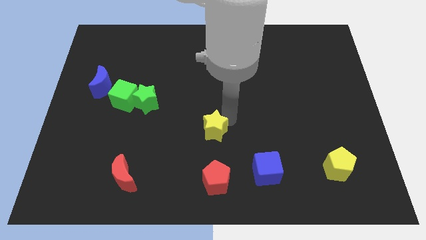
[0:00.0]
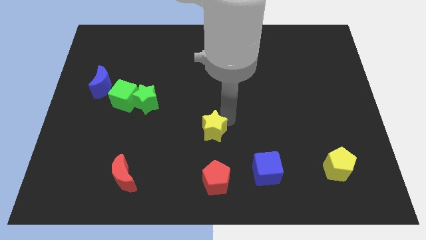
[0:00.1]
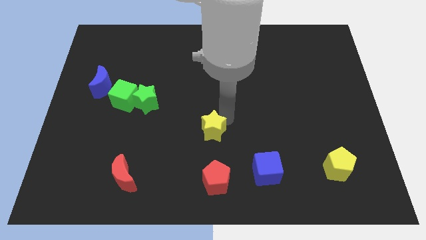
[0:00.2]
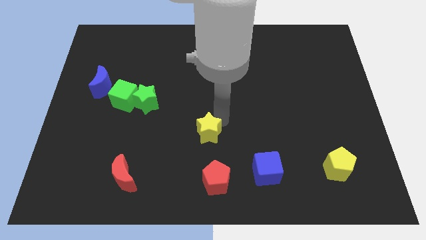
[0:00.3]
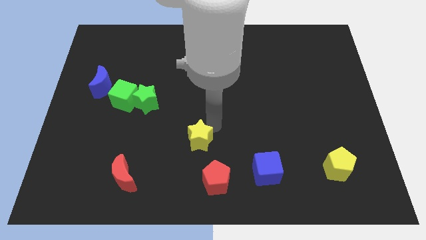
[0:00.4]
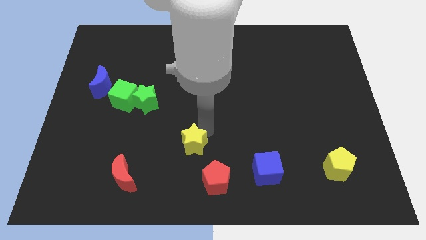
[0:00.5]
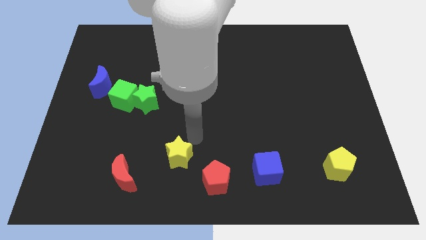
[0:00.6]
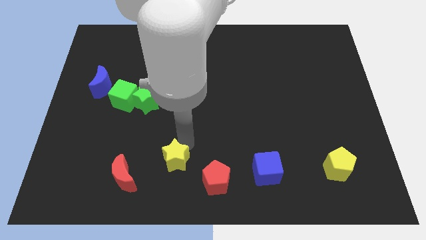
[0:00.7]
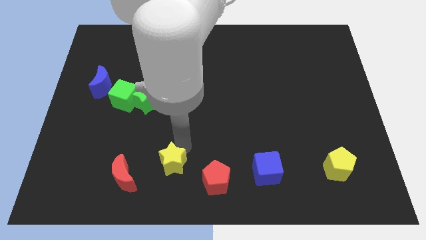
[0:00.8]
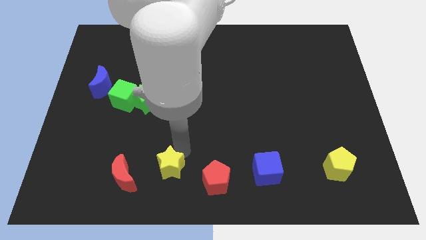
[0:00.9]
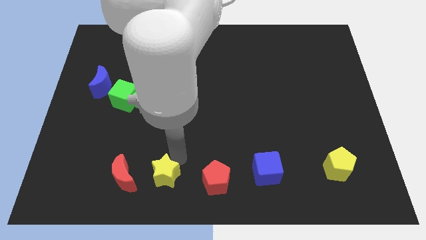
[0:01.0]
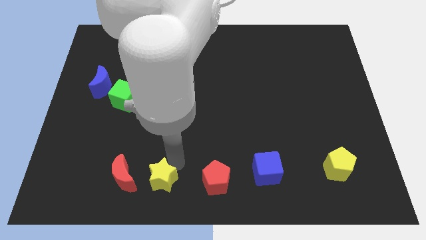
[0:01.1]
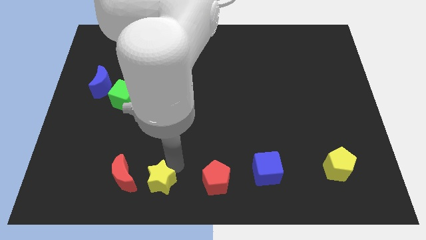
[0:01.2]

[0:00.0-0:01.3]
move the yellow star between red pentagon and red moon

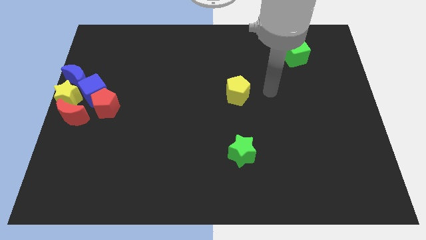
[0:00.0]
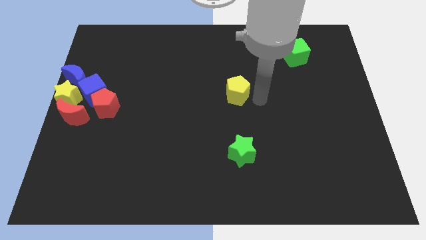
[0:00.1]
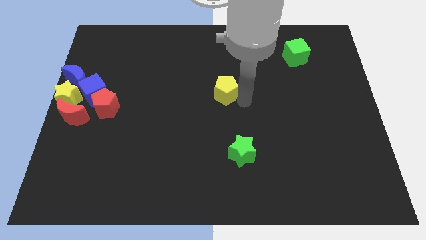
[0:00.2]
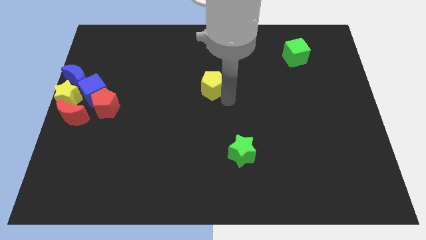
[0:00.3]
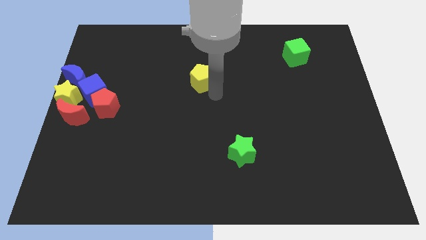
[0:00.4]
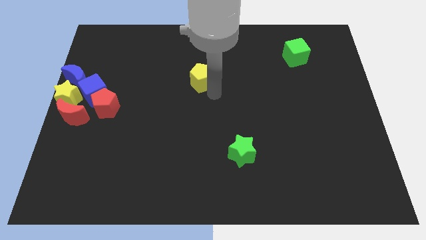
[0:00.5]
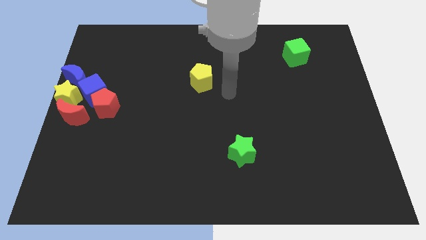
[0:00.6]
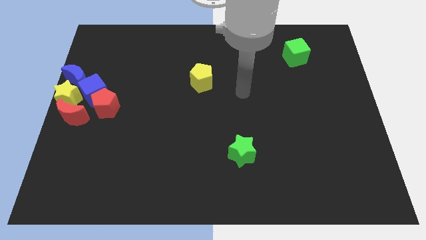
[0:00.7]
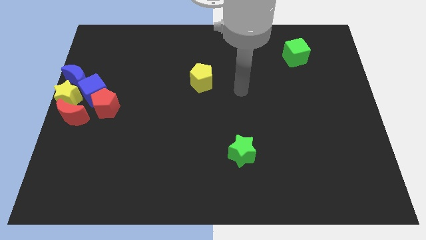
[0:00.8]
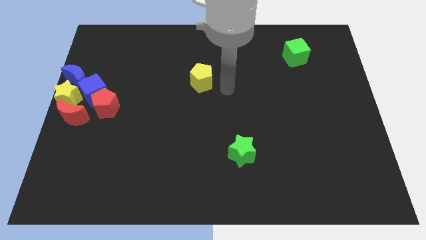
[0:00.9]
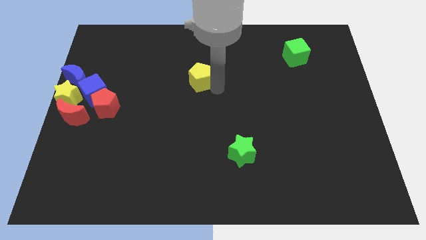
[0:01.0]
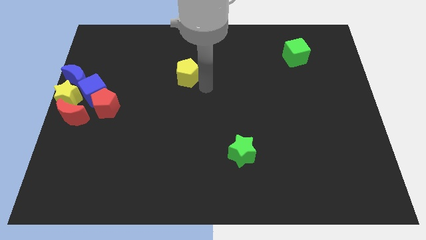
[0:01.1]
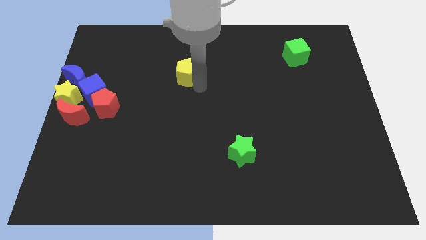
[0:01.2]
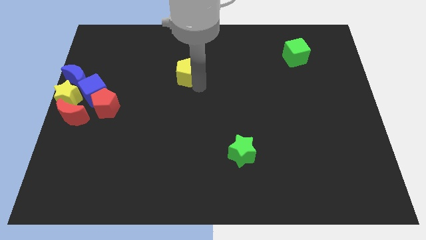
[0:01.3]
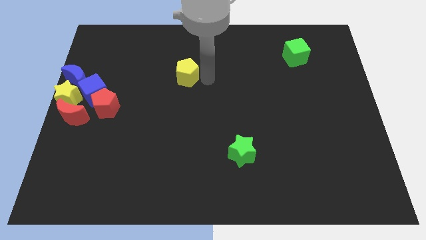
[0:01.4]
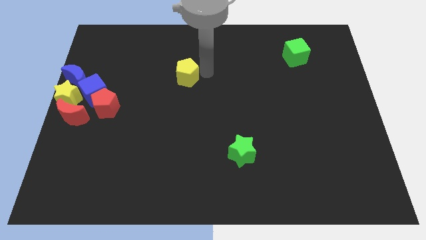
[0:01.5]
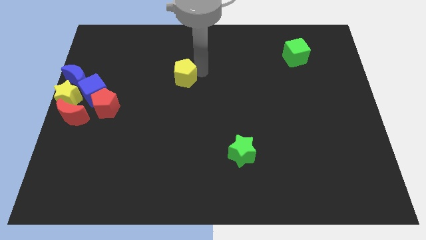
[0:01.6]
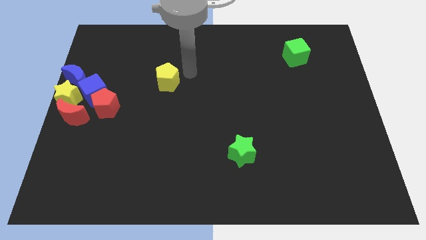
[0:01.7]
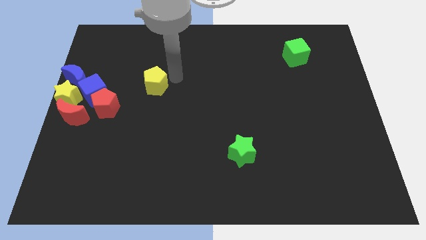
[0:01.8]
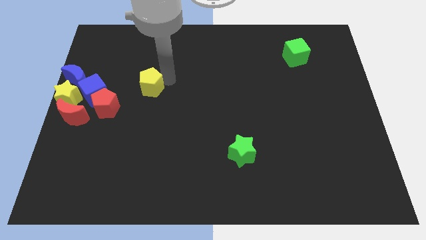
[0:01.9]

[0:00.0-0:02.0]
drag yellow pentagon towards group of blocks

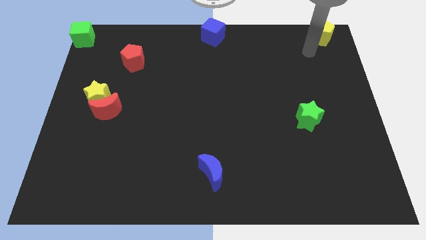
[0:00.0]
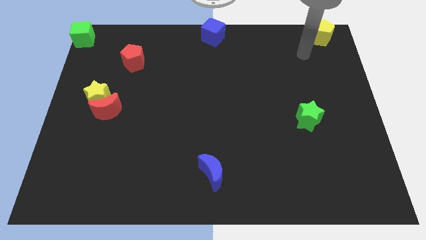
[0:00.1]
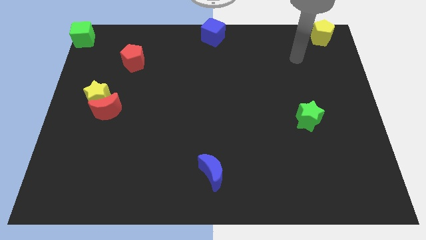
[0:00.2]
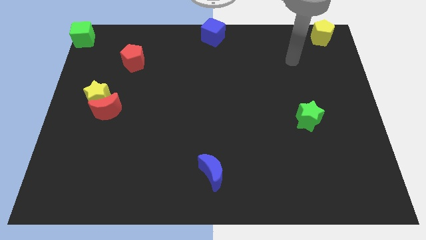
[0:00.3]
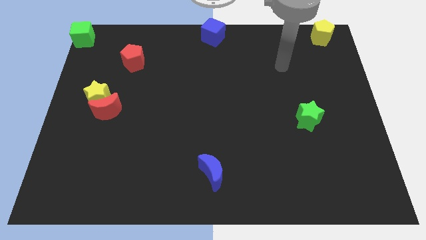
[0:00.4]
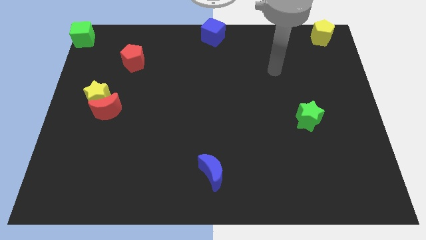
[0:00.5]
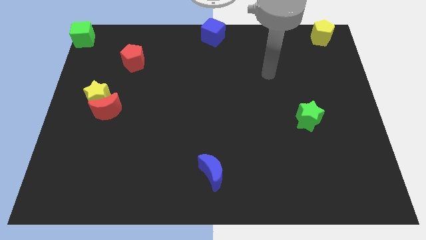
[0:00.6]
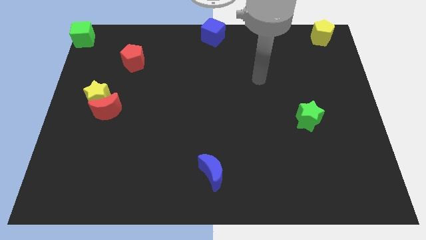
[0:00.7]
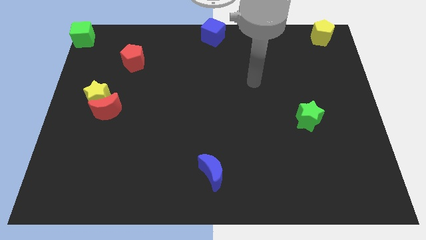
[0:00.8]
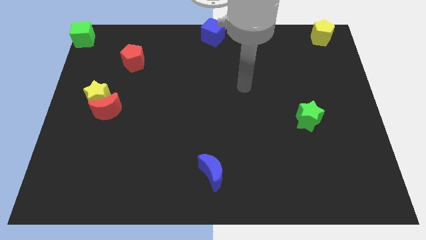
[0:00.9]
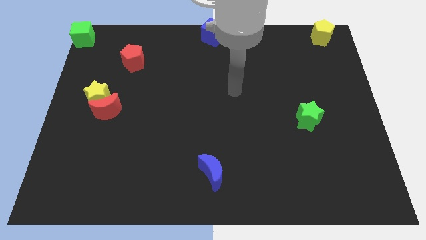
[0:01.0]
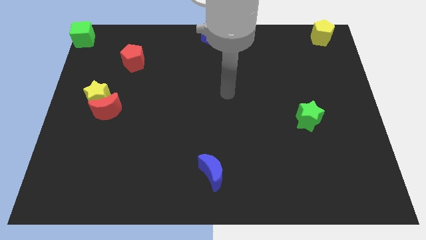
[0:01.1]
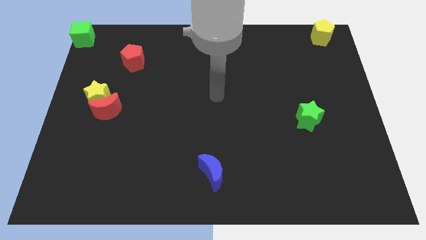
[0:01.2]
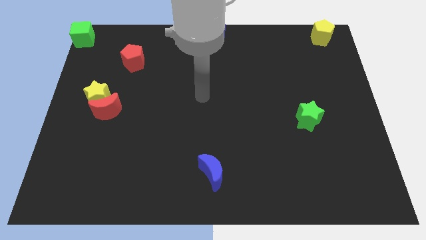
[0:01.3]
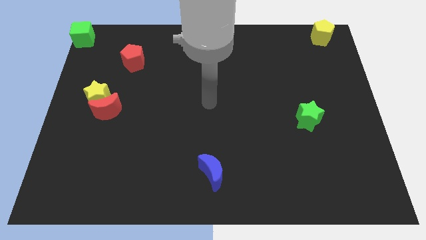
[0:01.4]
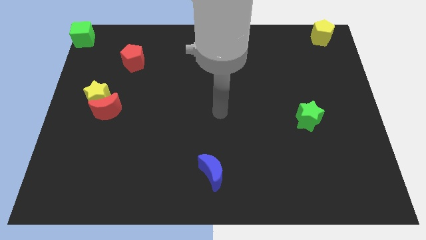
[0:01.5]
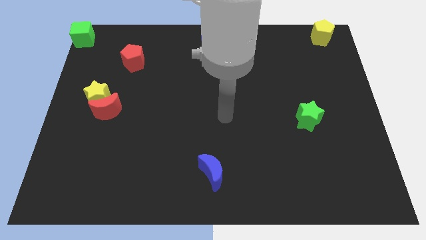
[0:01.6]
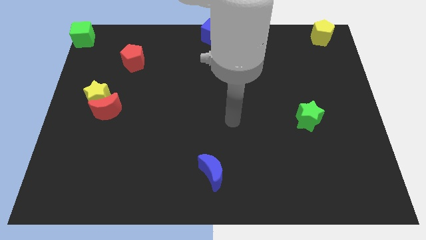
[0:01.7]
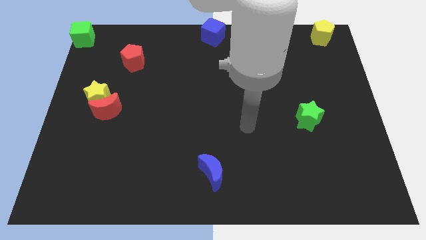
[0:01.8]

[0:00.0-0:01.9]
move your arm away from the yellow pentagon

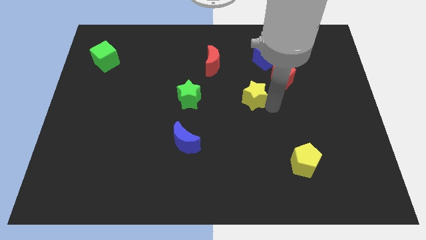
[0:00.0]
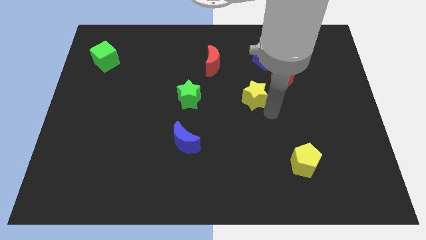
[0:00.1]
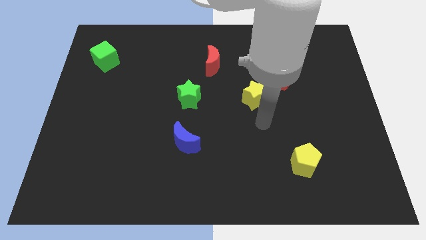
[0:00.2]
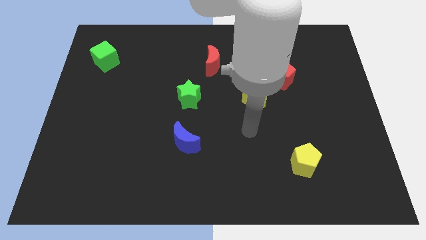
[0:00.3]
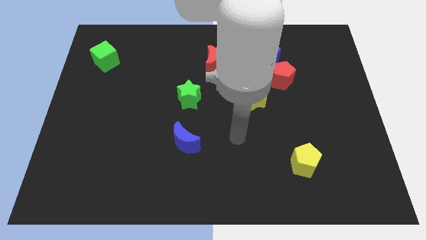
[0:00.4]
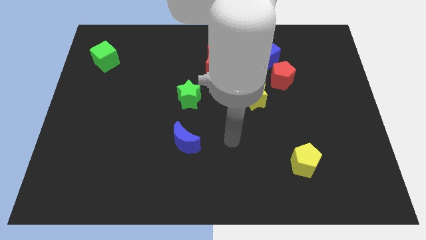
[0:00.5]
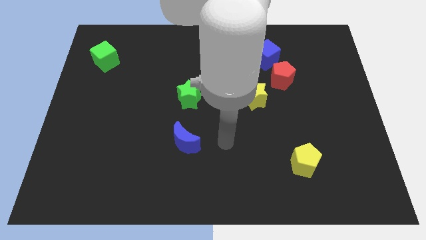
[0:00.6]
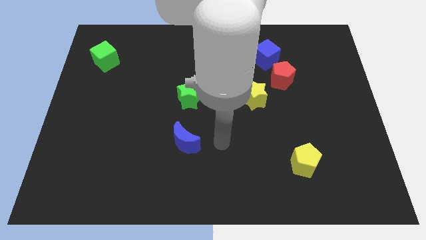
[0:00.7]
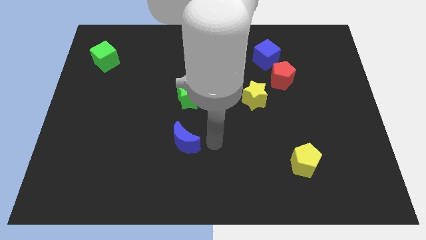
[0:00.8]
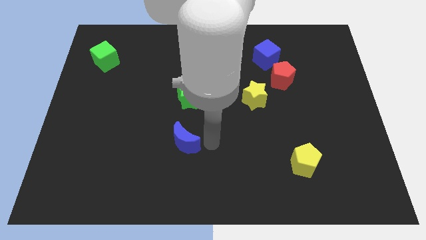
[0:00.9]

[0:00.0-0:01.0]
point your arm at the right of the blue crescent

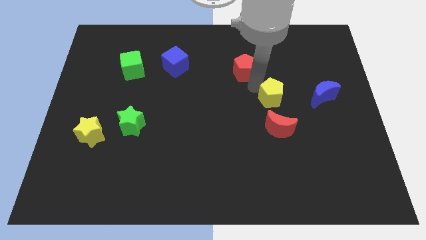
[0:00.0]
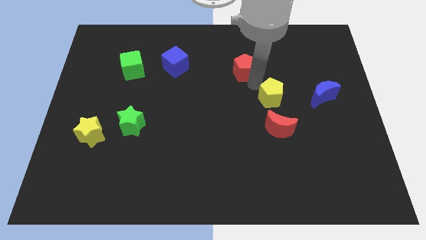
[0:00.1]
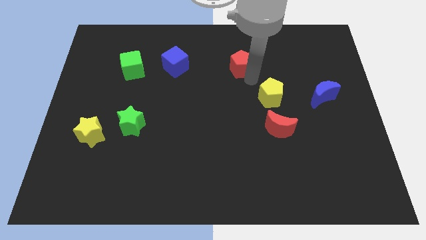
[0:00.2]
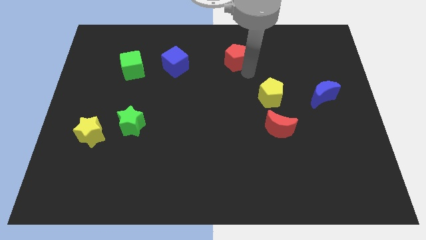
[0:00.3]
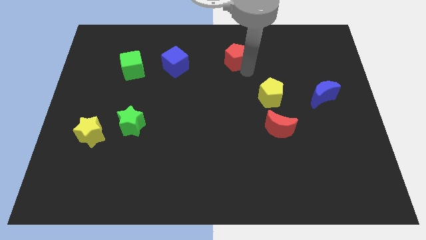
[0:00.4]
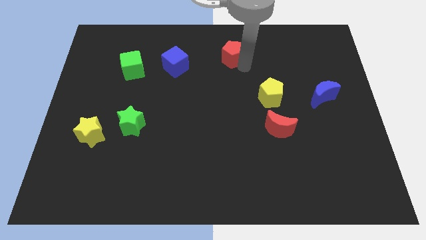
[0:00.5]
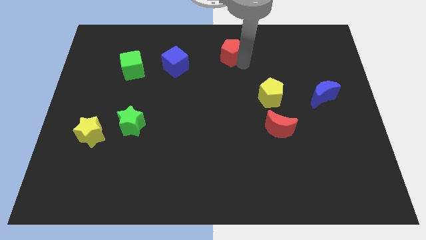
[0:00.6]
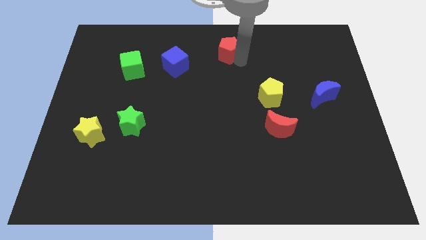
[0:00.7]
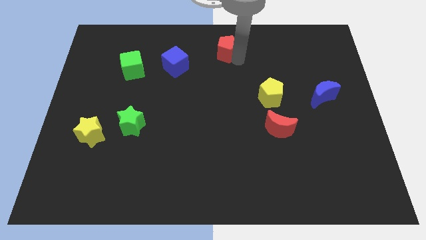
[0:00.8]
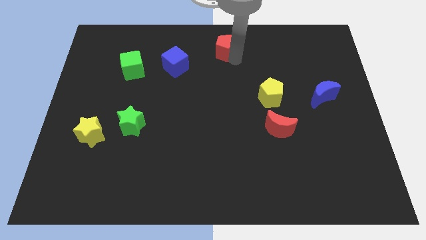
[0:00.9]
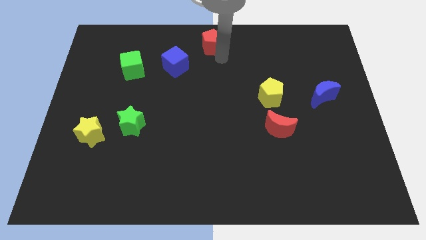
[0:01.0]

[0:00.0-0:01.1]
move red pentagon towards the top center

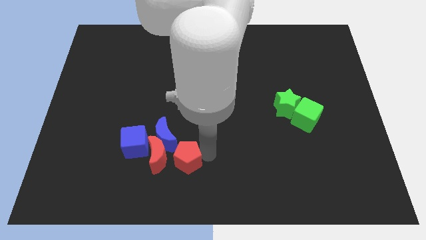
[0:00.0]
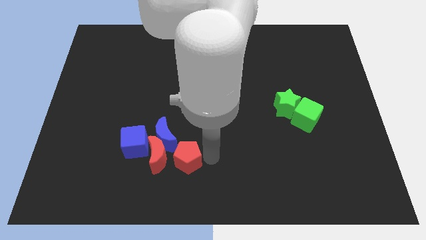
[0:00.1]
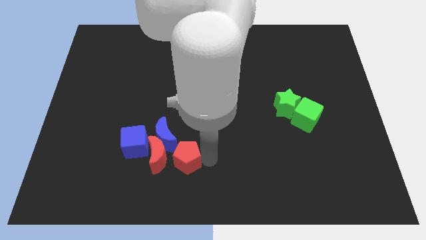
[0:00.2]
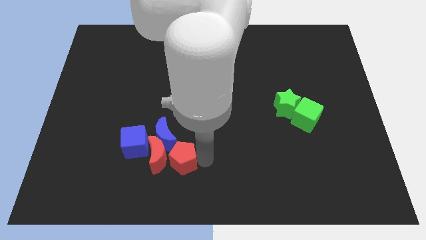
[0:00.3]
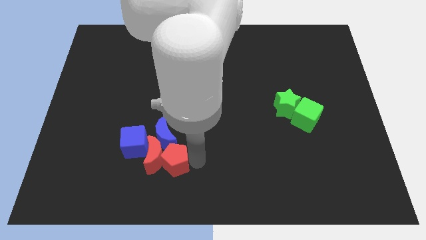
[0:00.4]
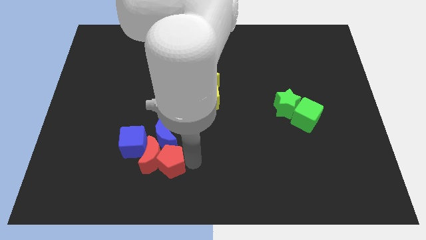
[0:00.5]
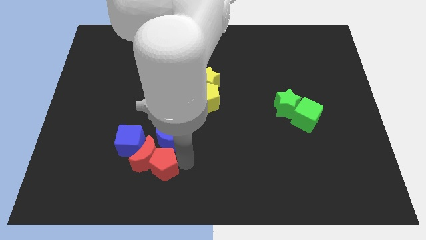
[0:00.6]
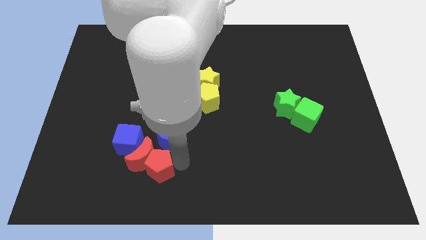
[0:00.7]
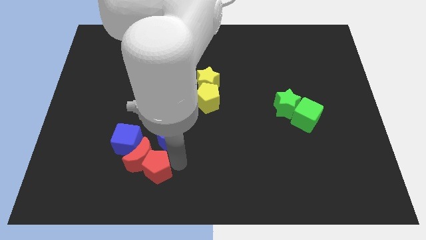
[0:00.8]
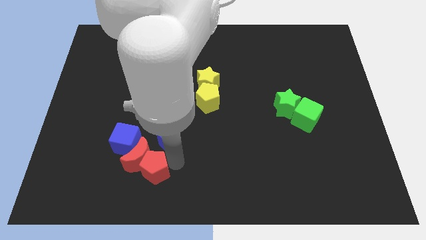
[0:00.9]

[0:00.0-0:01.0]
push the red pentagon into the red crescent

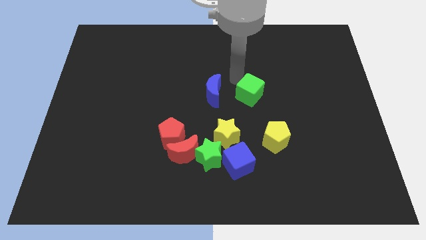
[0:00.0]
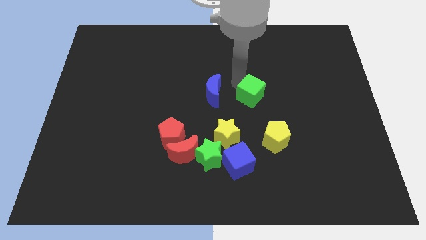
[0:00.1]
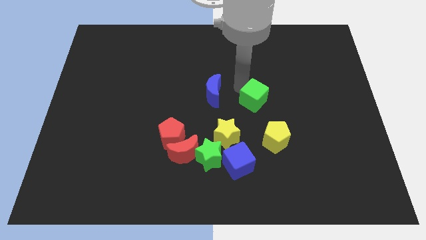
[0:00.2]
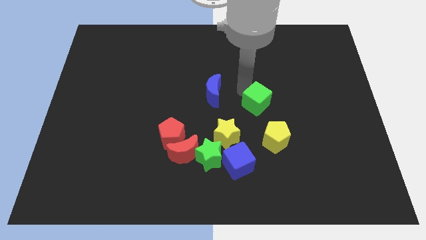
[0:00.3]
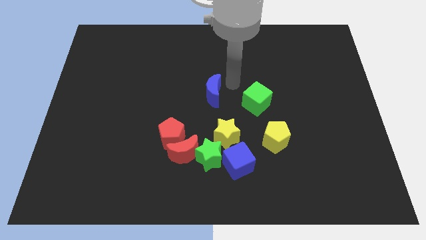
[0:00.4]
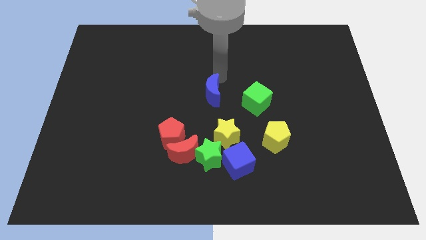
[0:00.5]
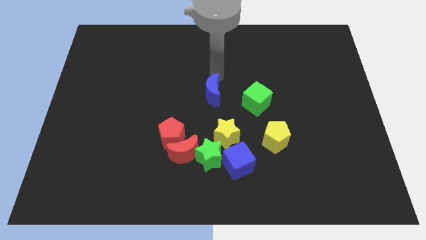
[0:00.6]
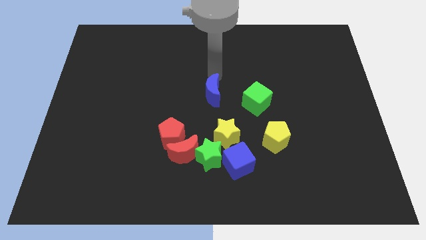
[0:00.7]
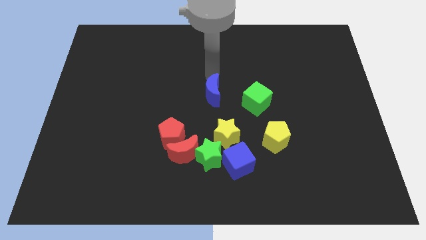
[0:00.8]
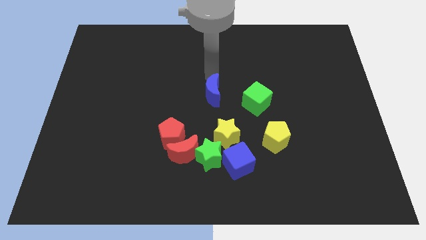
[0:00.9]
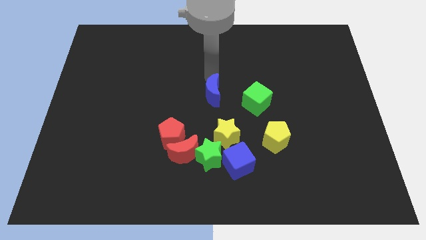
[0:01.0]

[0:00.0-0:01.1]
move the green cube diagonal to the right of the yellow star
